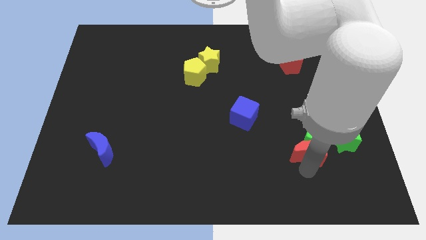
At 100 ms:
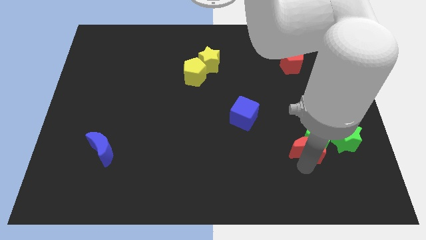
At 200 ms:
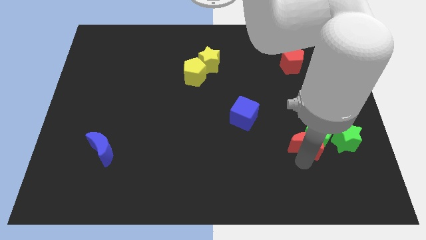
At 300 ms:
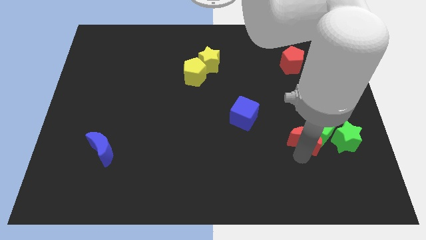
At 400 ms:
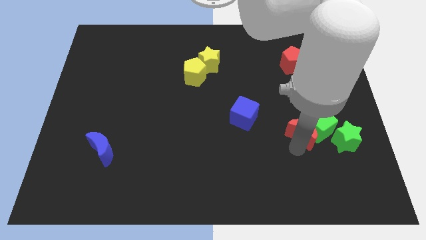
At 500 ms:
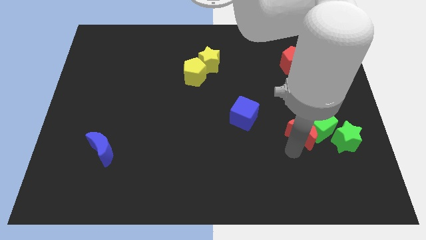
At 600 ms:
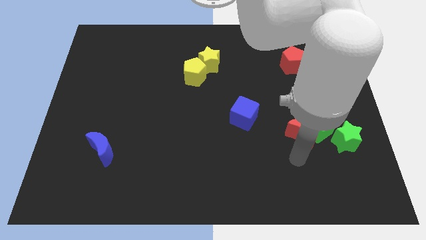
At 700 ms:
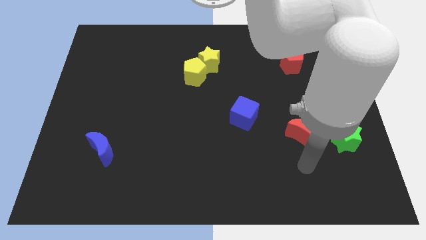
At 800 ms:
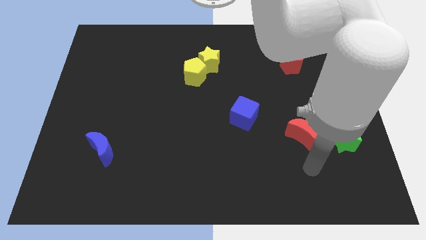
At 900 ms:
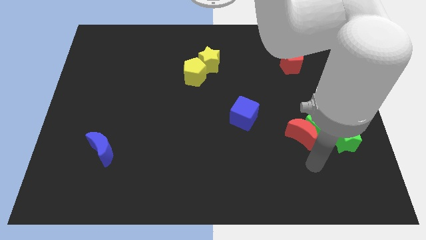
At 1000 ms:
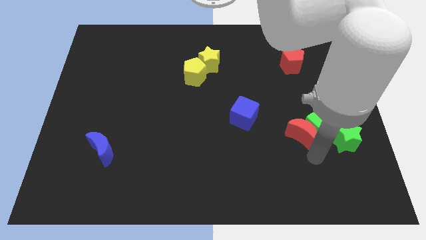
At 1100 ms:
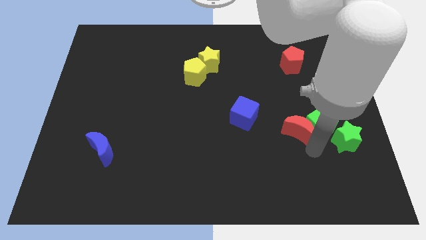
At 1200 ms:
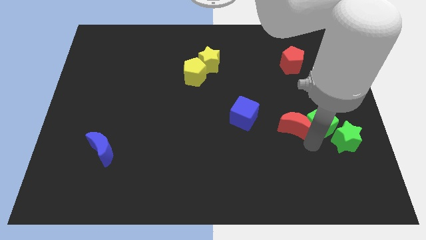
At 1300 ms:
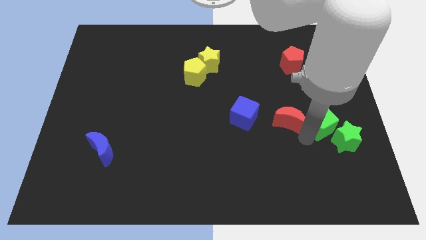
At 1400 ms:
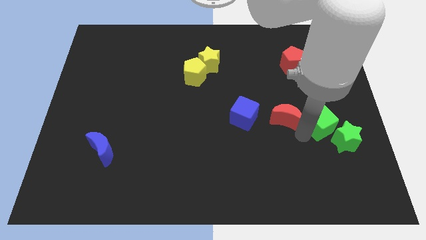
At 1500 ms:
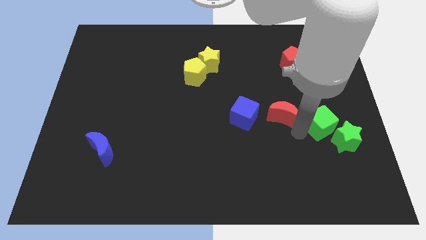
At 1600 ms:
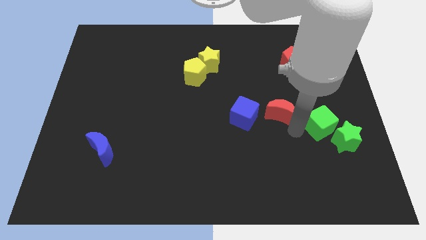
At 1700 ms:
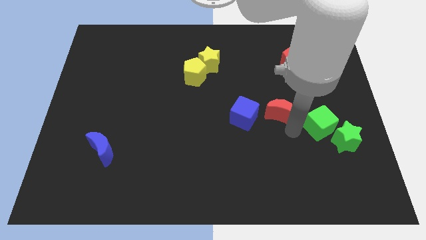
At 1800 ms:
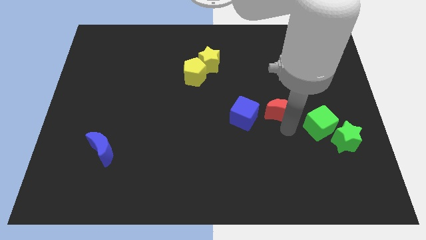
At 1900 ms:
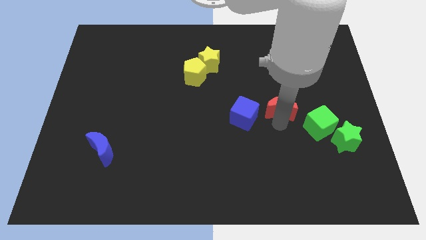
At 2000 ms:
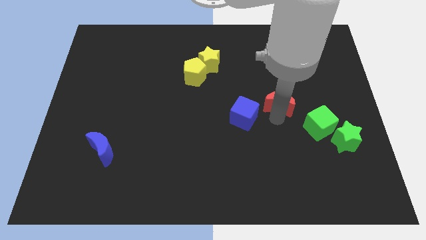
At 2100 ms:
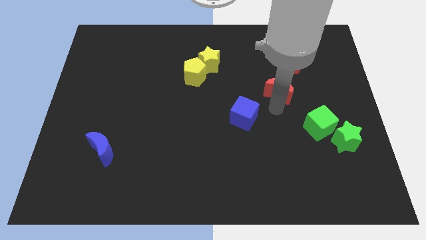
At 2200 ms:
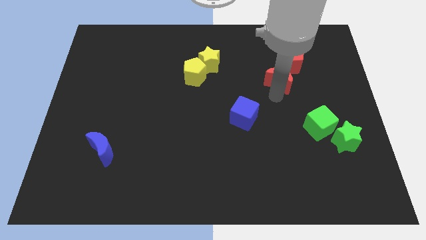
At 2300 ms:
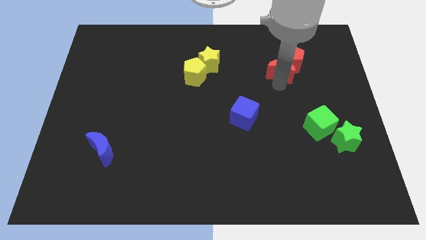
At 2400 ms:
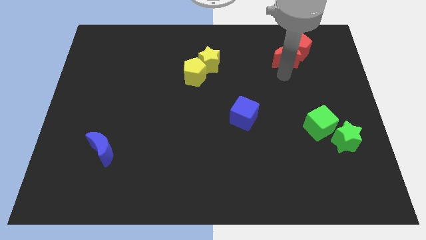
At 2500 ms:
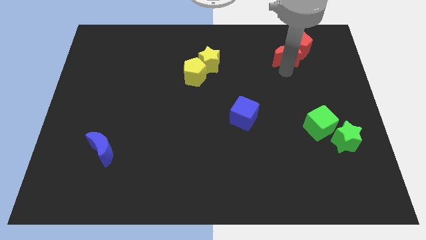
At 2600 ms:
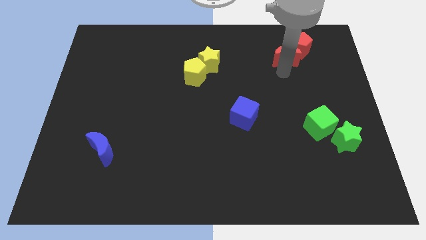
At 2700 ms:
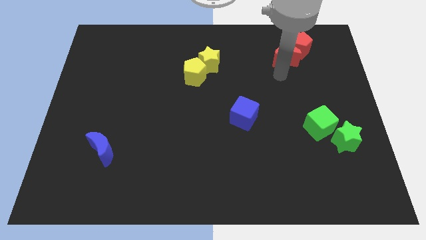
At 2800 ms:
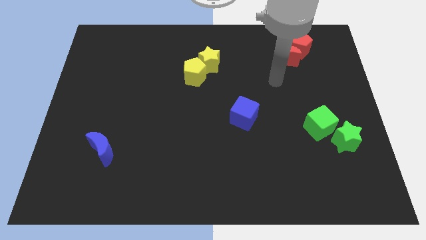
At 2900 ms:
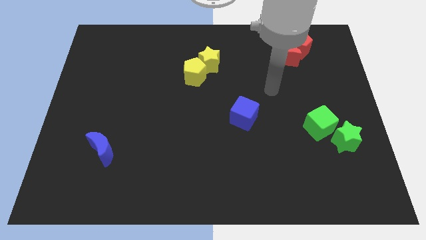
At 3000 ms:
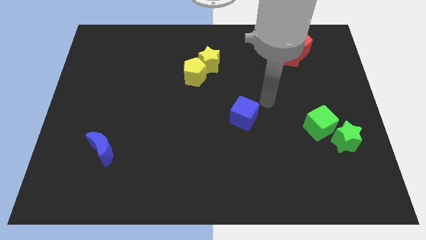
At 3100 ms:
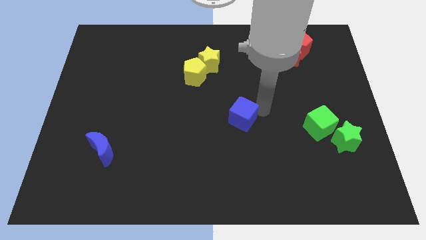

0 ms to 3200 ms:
move the red crescent below the red pentagon

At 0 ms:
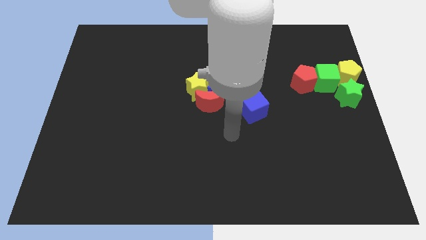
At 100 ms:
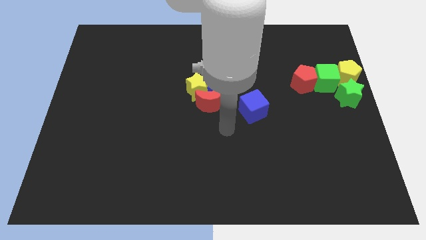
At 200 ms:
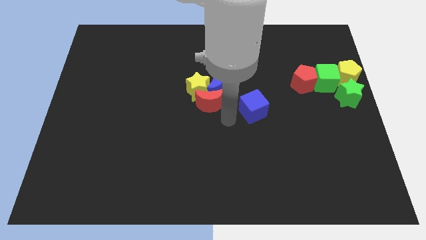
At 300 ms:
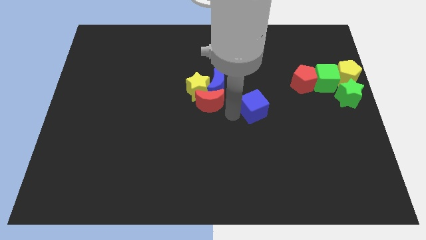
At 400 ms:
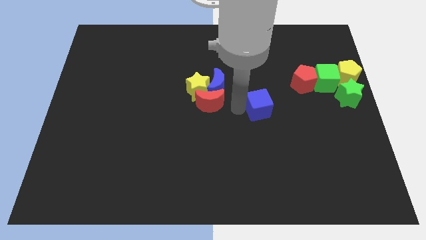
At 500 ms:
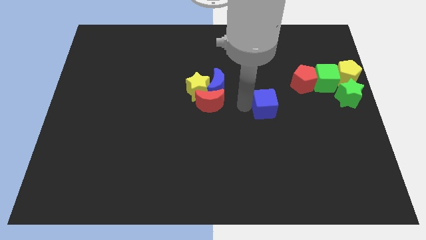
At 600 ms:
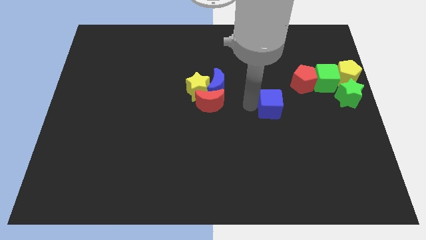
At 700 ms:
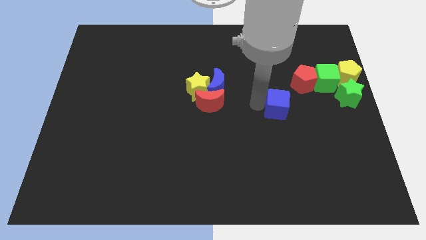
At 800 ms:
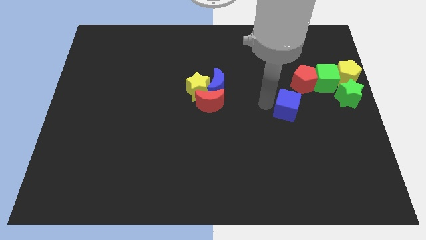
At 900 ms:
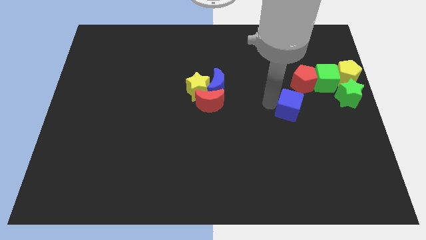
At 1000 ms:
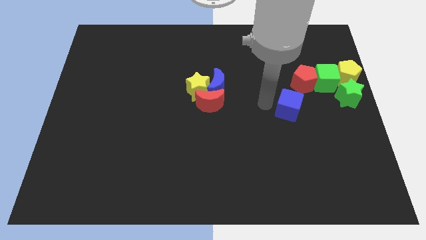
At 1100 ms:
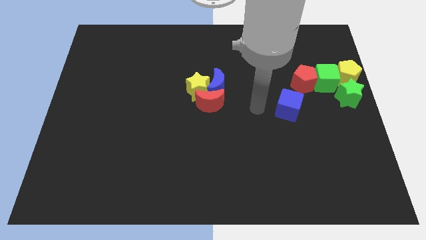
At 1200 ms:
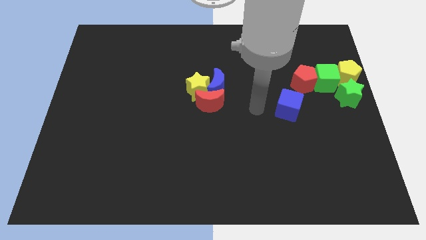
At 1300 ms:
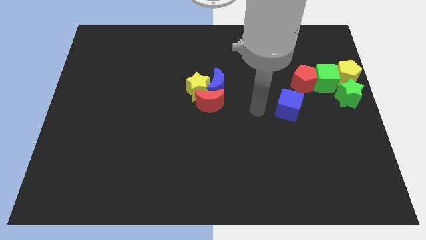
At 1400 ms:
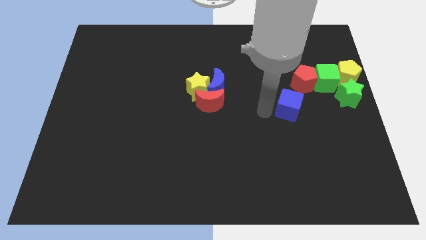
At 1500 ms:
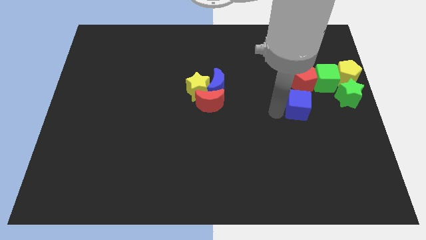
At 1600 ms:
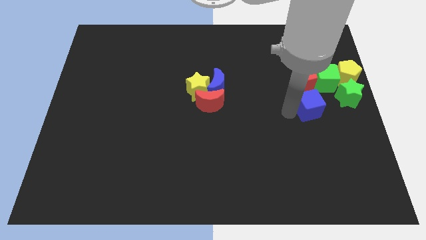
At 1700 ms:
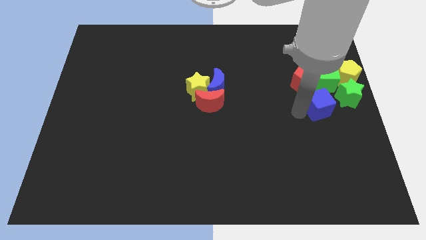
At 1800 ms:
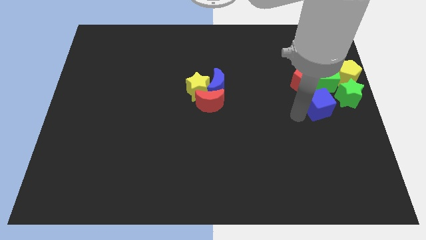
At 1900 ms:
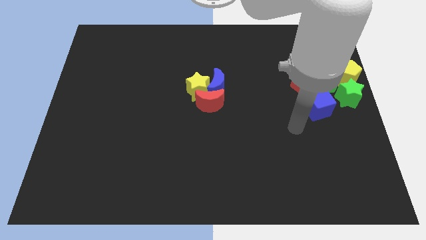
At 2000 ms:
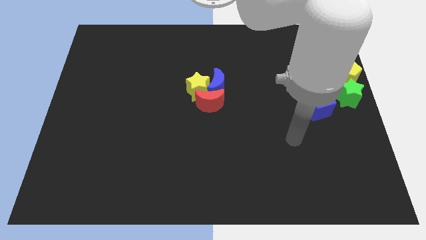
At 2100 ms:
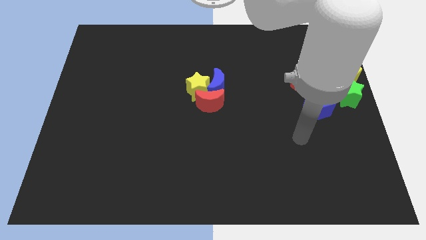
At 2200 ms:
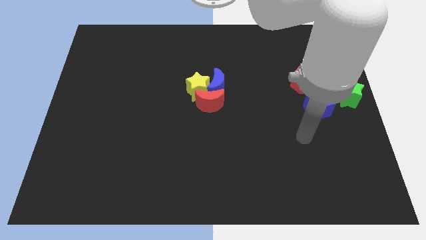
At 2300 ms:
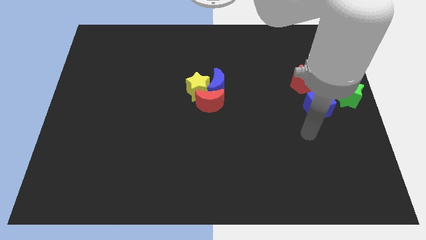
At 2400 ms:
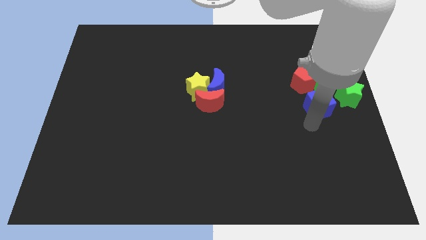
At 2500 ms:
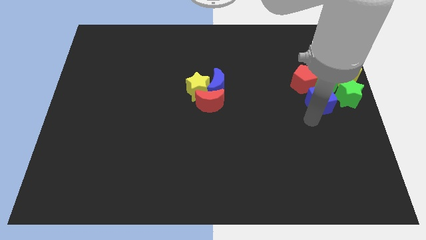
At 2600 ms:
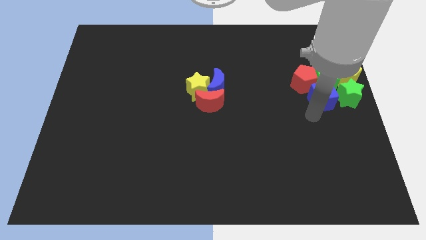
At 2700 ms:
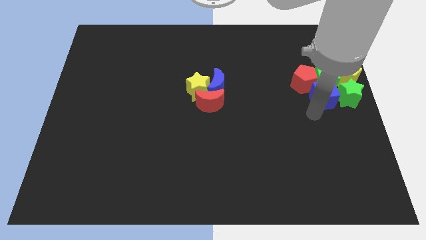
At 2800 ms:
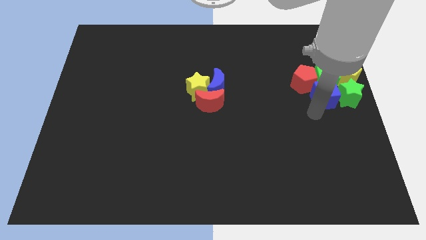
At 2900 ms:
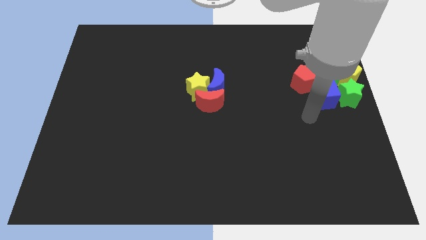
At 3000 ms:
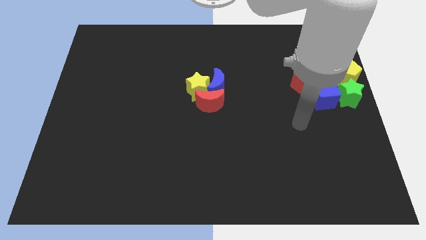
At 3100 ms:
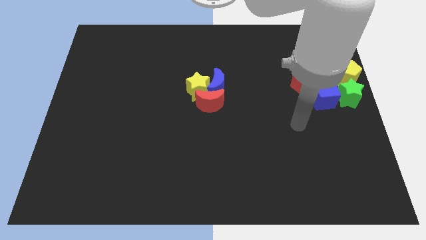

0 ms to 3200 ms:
move the blue cube close to the left side of the green star

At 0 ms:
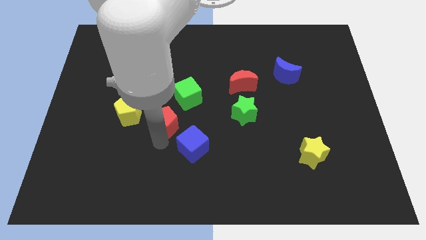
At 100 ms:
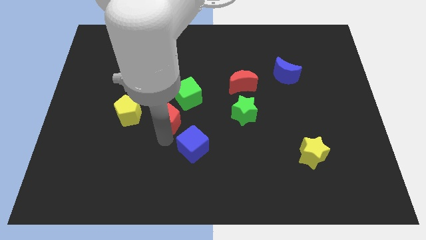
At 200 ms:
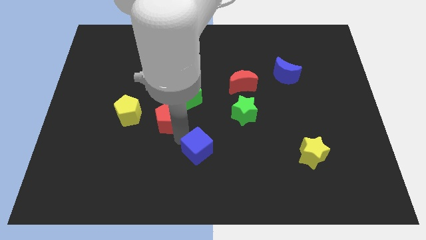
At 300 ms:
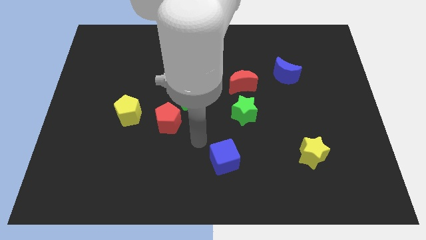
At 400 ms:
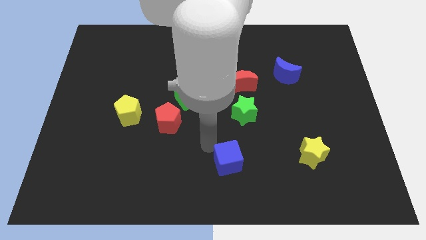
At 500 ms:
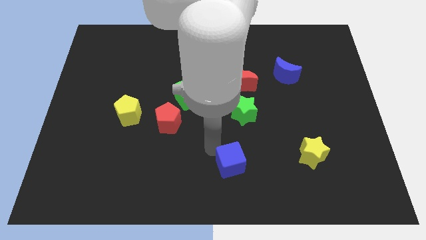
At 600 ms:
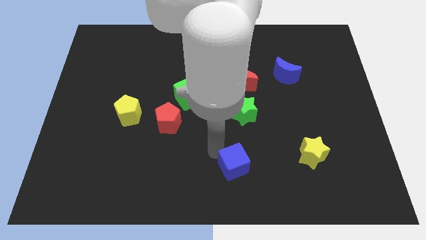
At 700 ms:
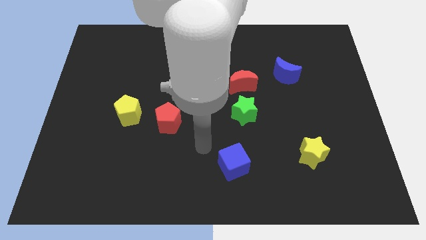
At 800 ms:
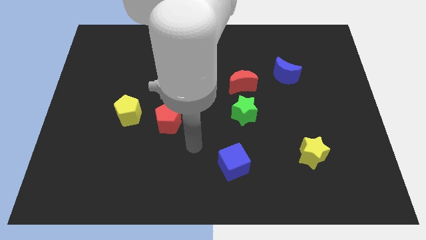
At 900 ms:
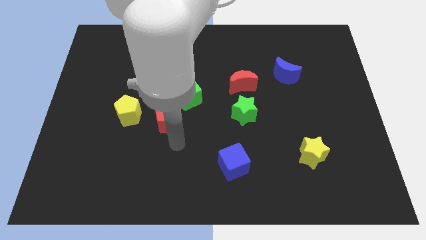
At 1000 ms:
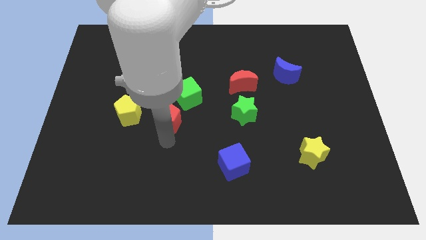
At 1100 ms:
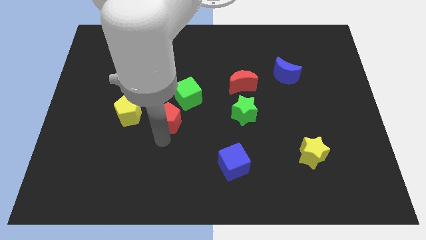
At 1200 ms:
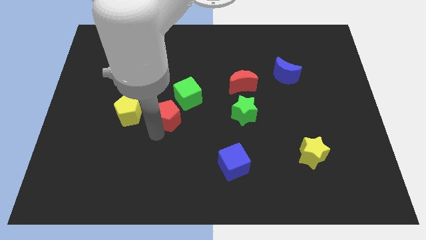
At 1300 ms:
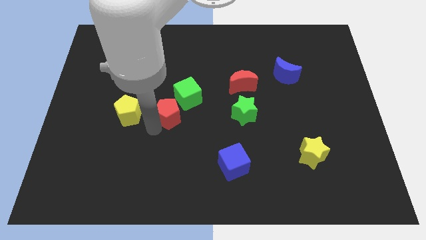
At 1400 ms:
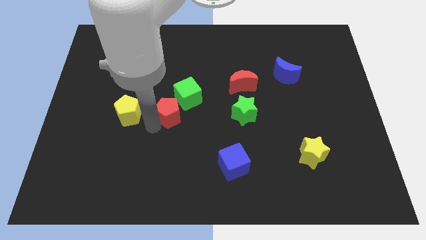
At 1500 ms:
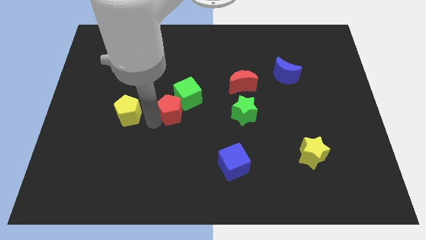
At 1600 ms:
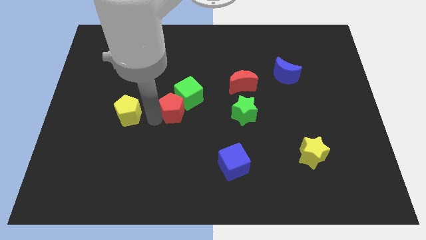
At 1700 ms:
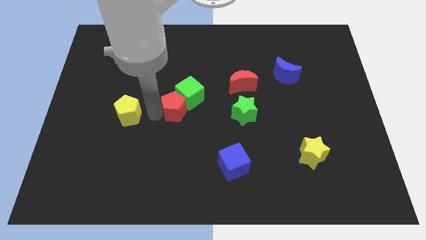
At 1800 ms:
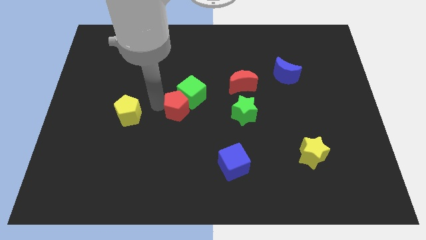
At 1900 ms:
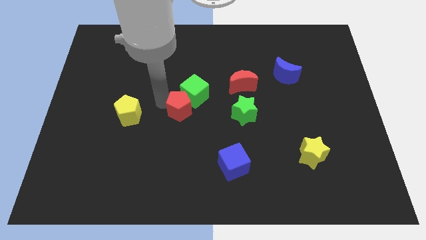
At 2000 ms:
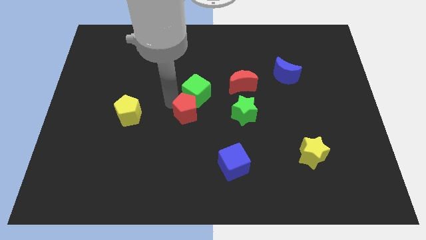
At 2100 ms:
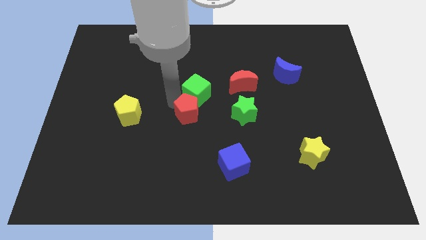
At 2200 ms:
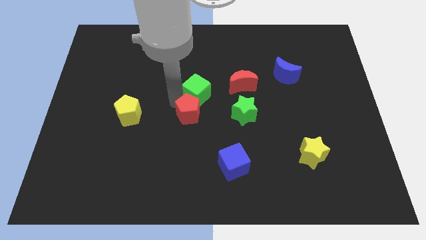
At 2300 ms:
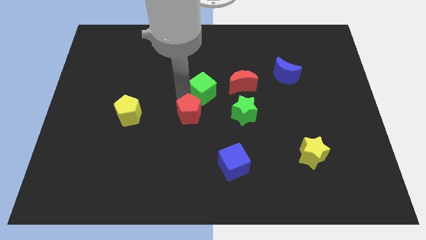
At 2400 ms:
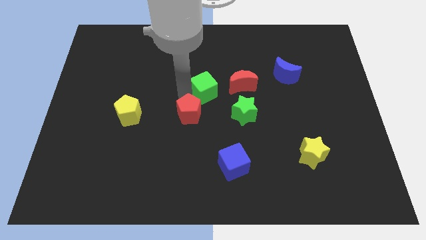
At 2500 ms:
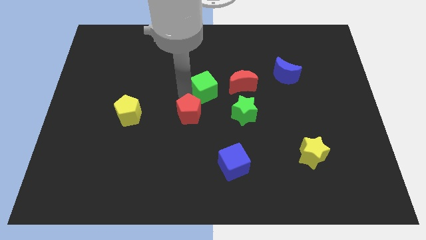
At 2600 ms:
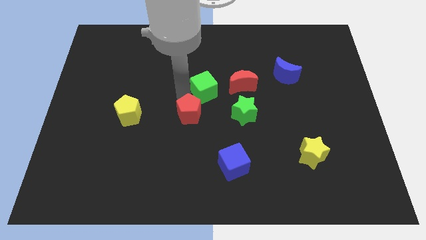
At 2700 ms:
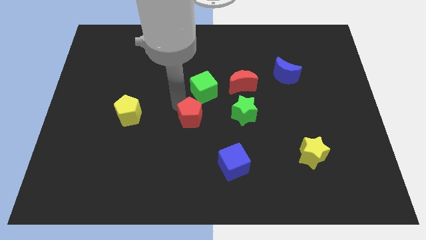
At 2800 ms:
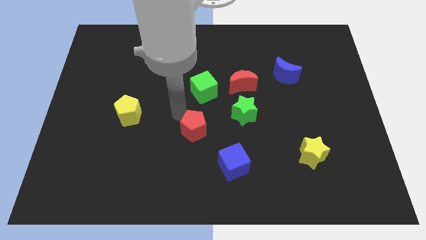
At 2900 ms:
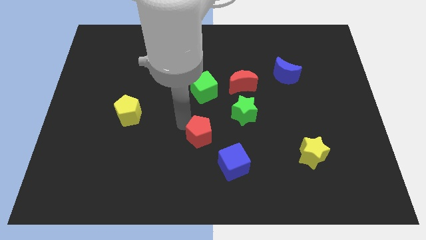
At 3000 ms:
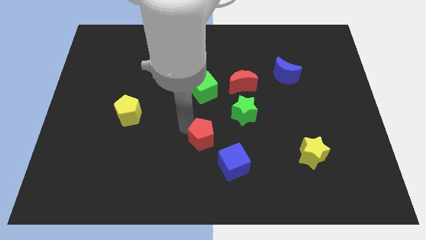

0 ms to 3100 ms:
move the red pentagon diagonally top left to the blue cube
